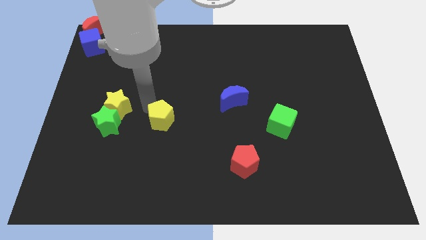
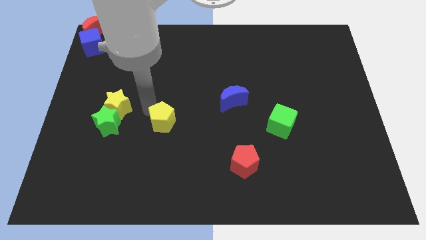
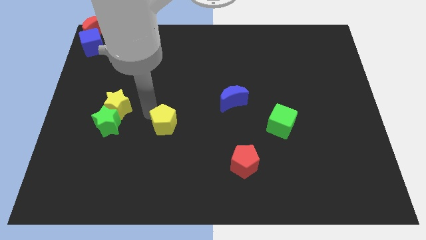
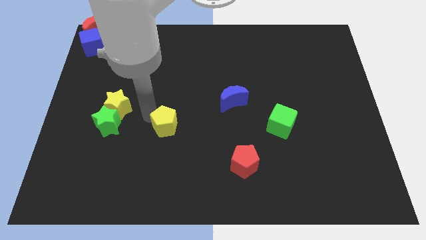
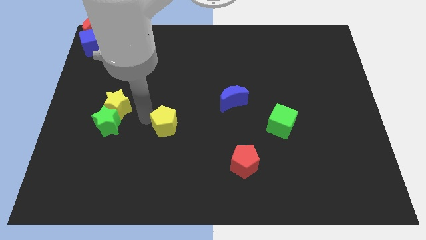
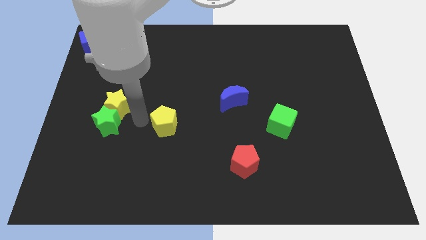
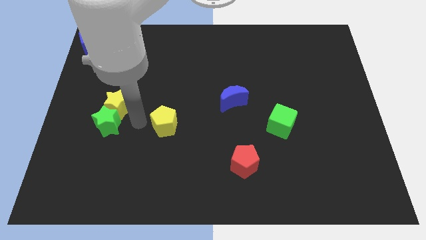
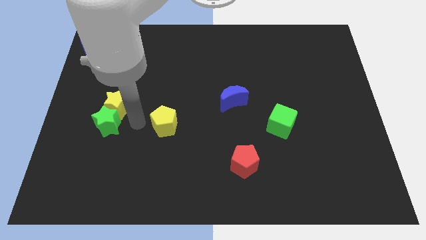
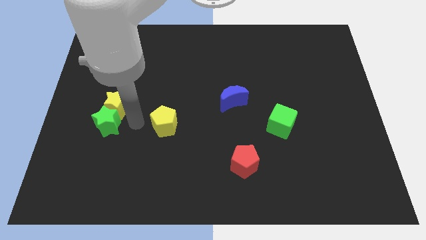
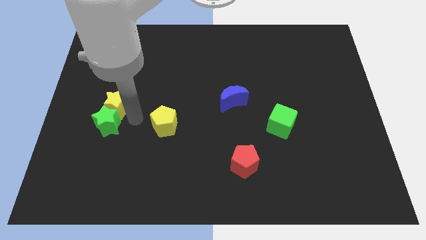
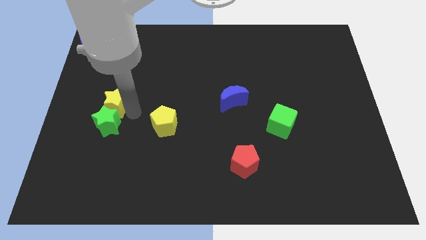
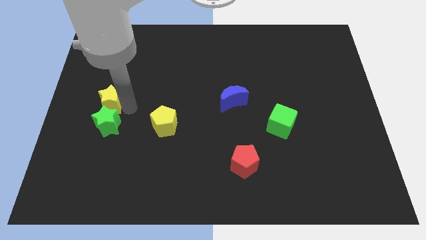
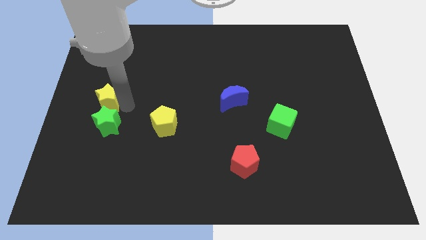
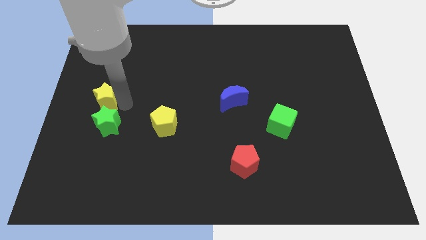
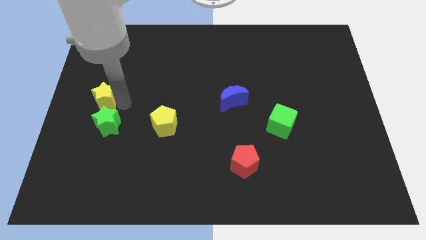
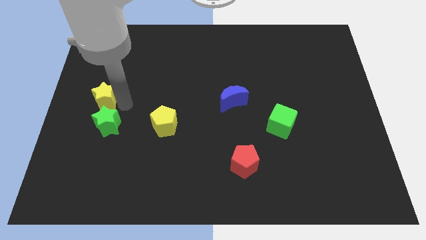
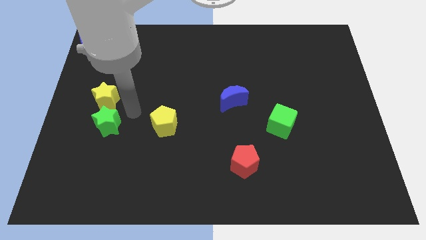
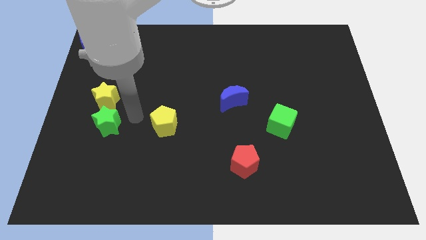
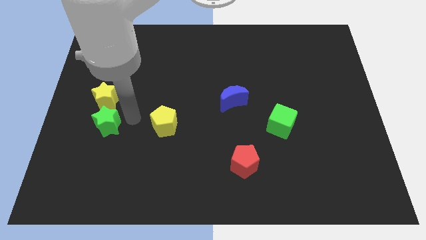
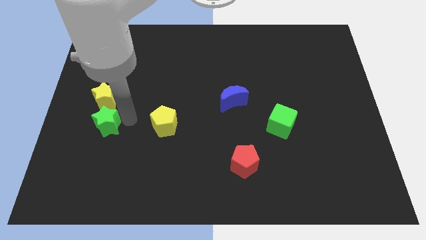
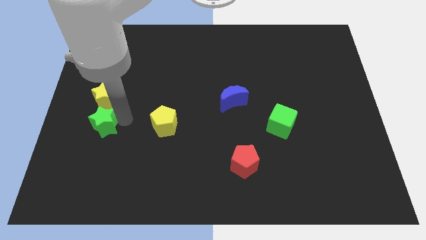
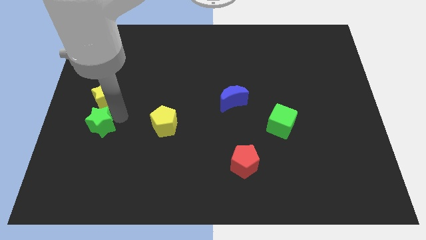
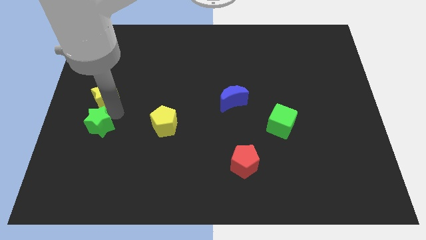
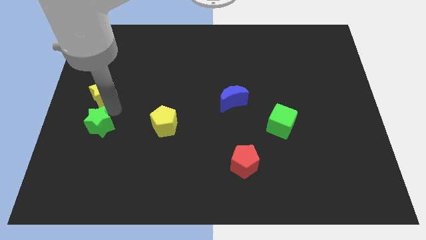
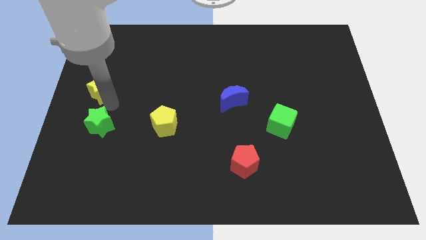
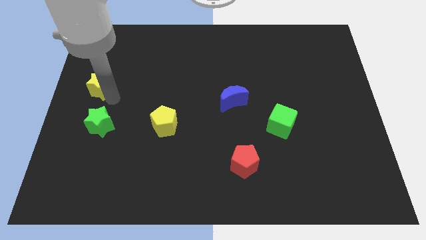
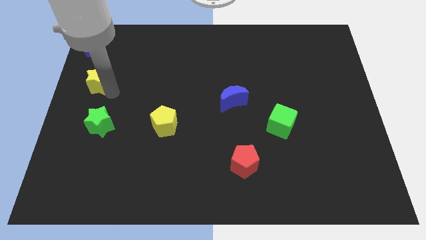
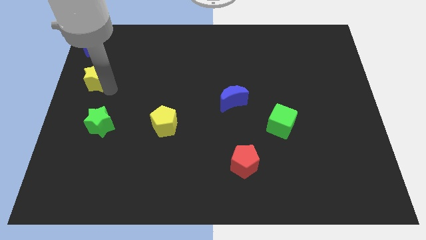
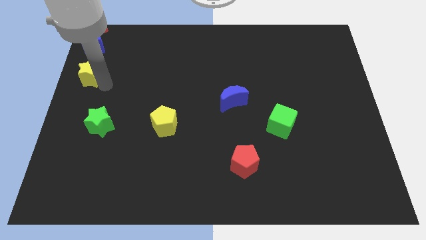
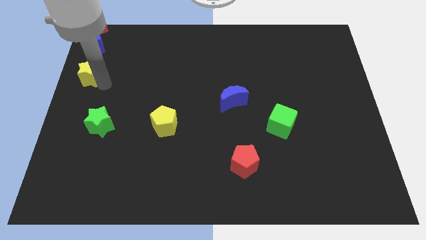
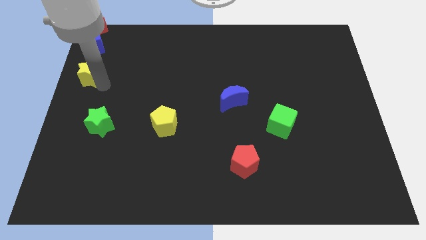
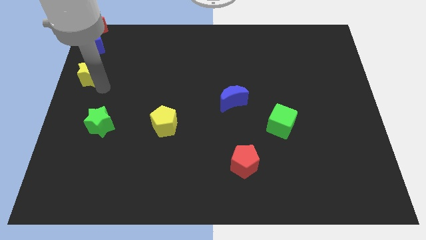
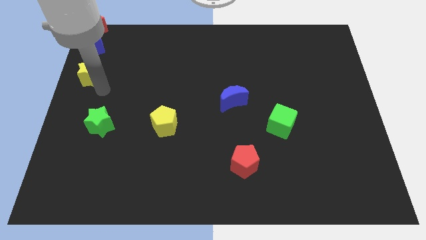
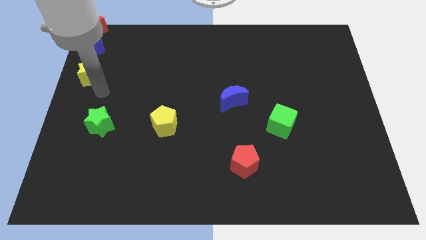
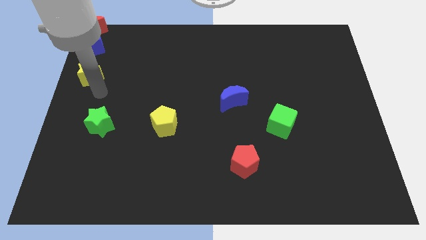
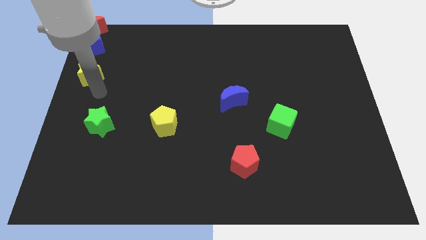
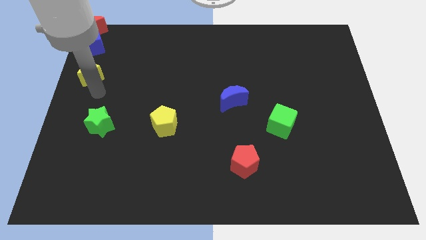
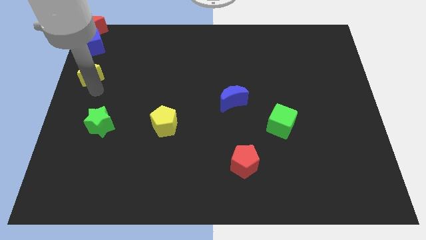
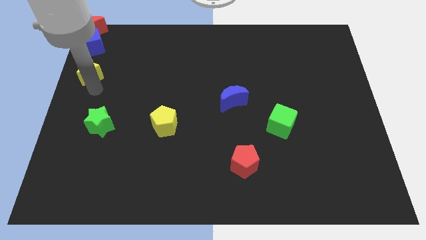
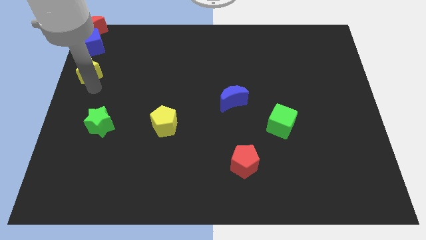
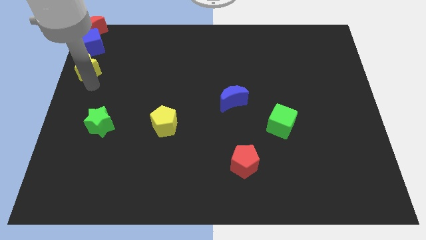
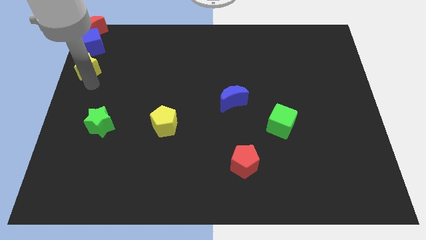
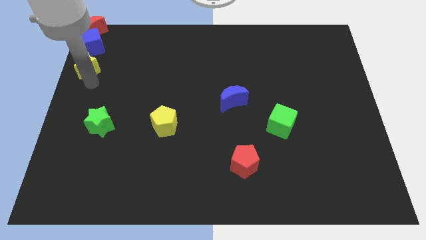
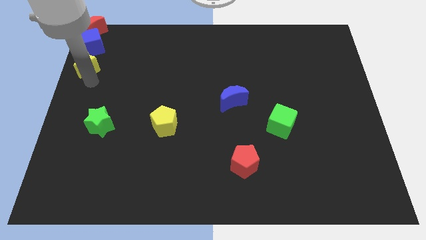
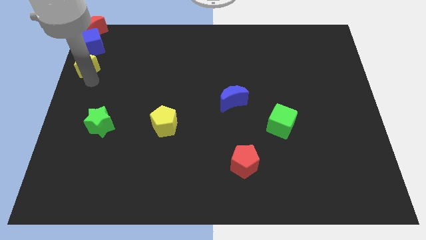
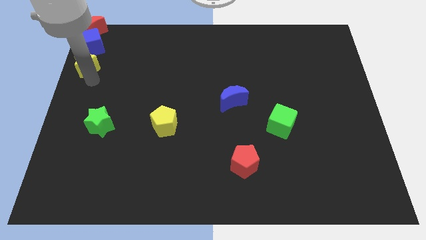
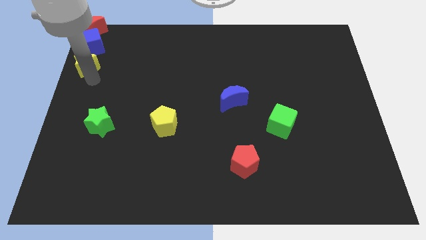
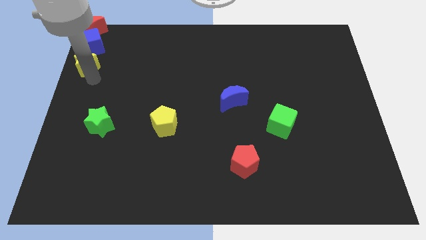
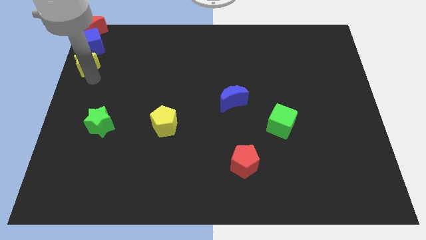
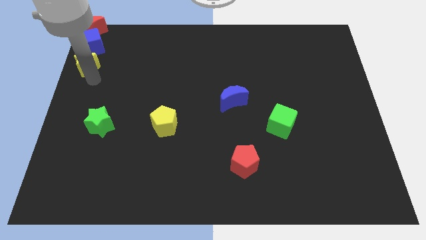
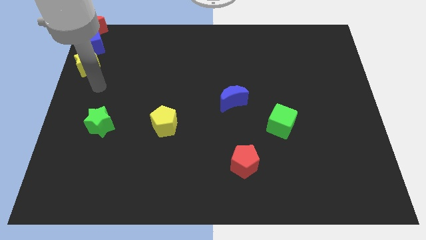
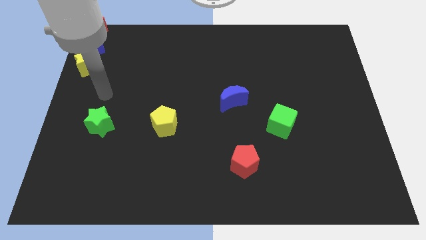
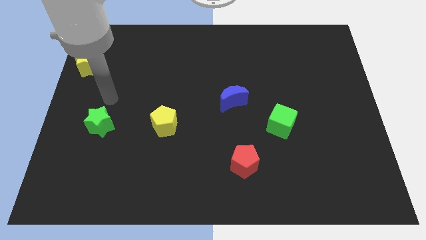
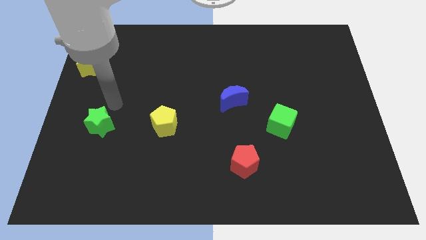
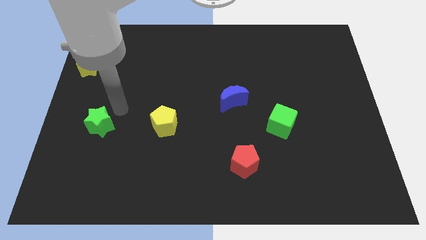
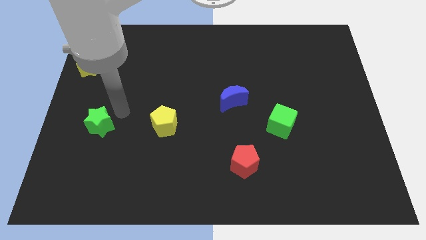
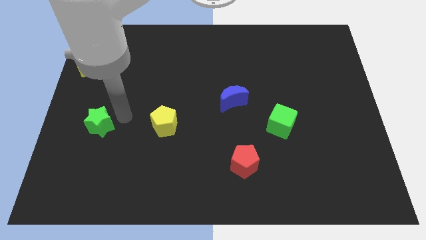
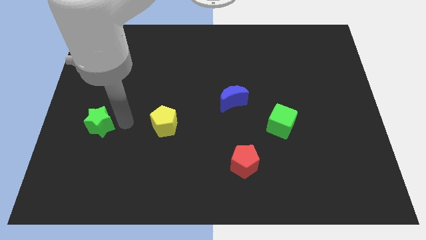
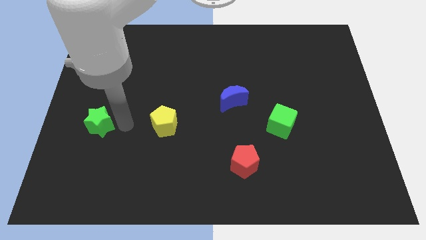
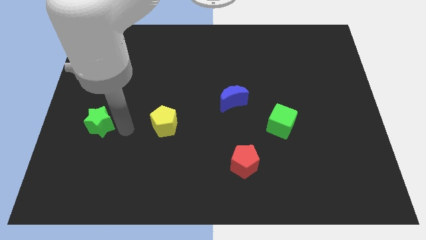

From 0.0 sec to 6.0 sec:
move the yellow star to the bottom of the blue cube

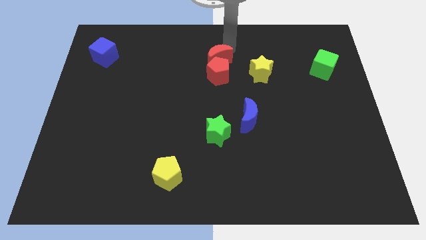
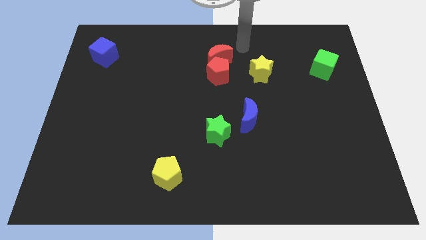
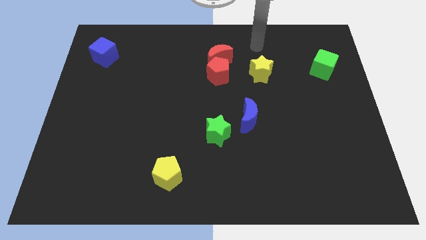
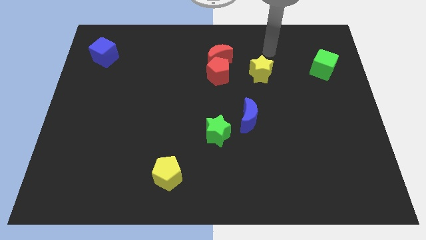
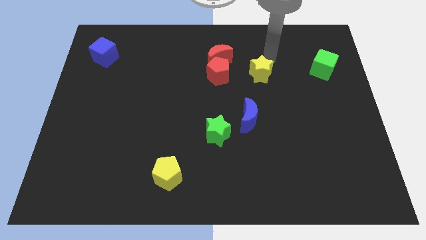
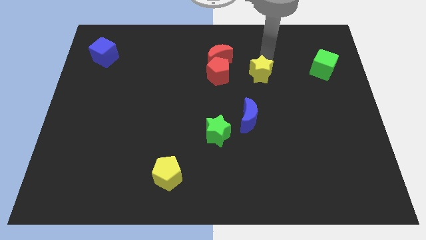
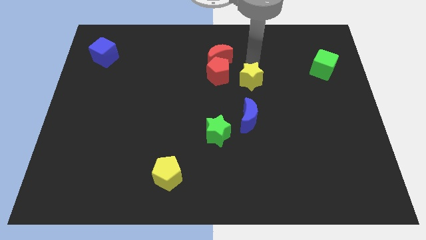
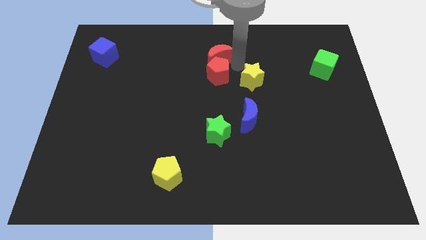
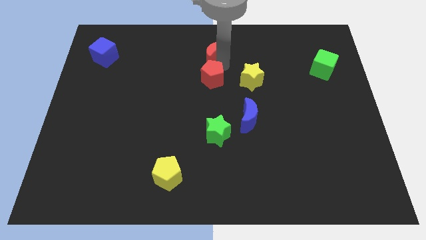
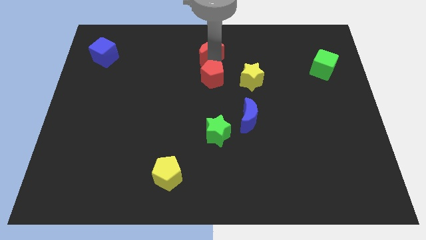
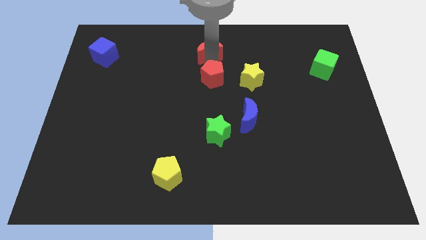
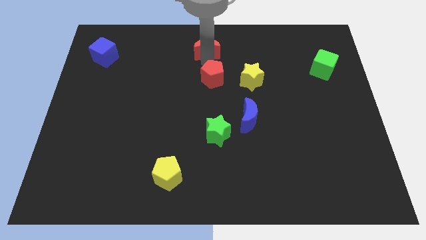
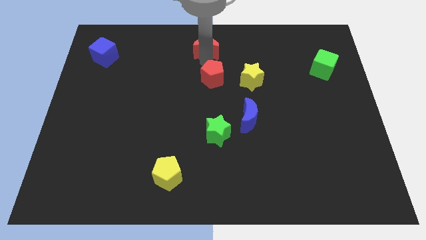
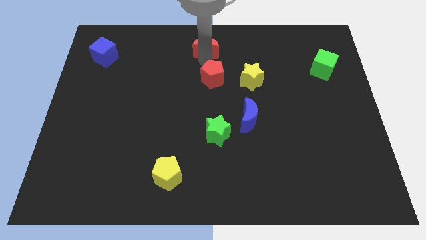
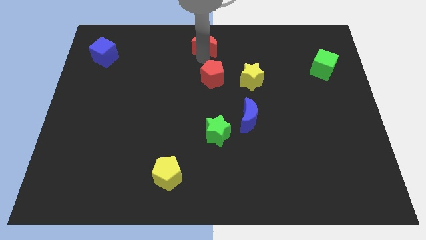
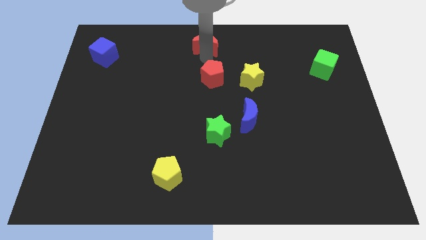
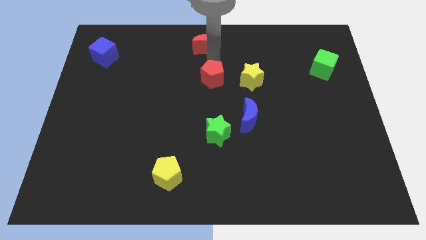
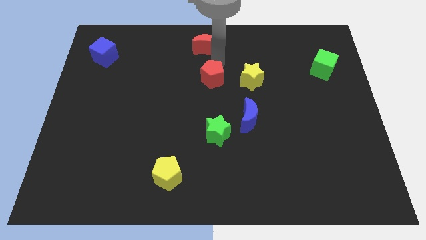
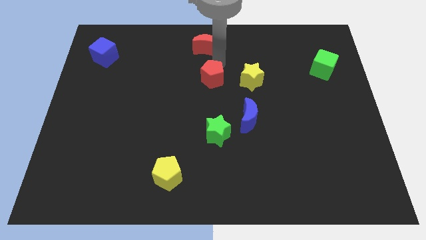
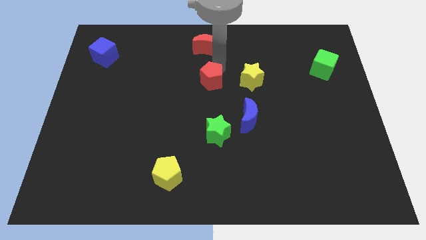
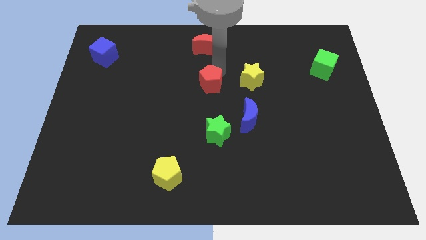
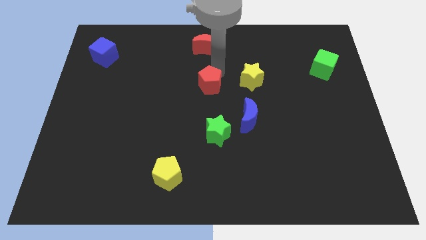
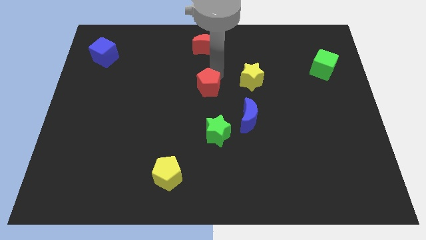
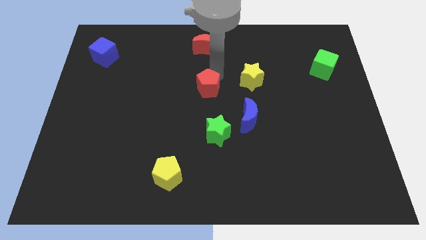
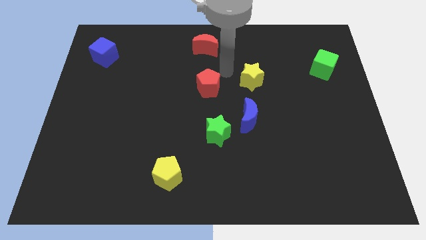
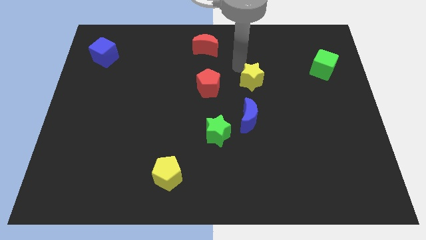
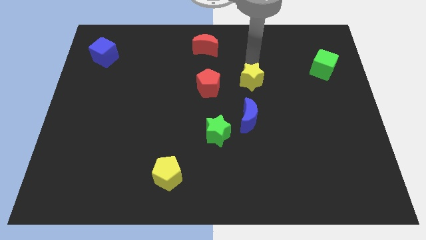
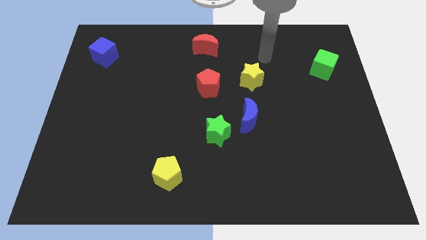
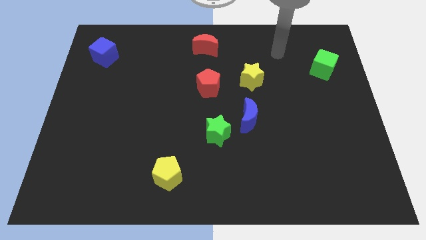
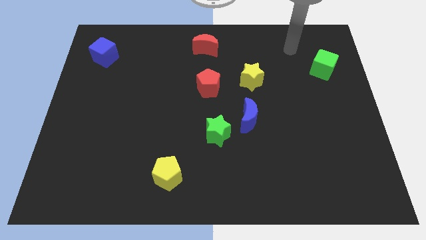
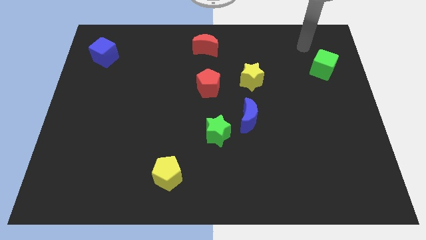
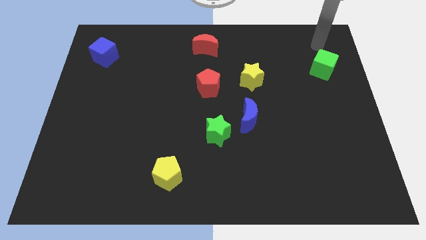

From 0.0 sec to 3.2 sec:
seprate red blocks
